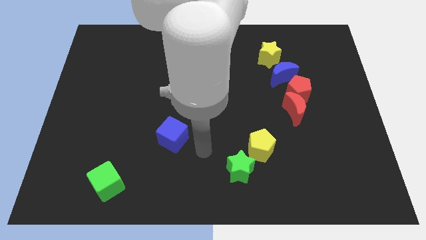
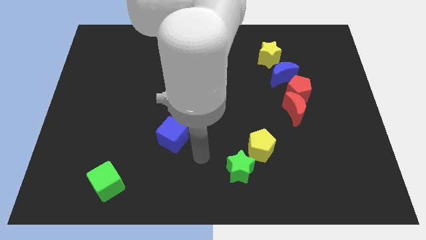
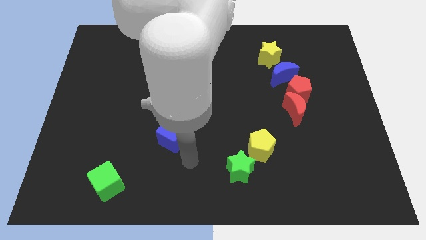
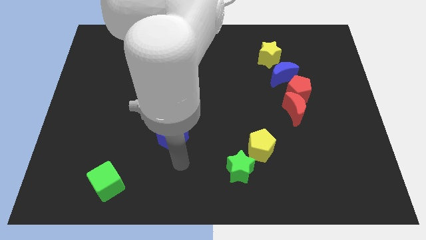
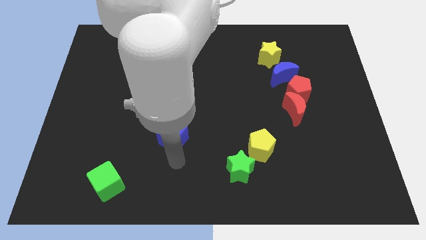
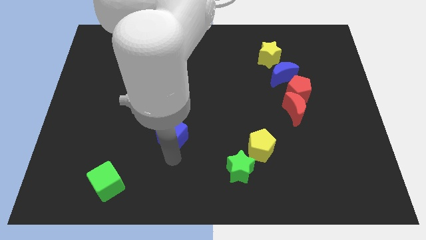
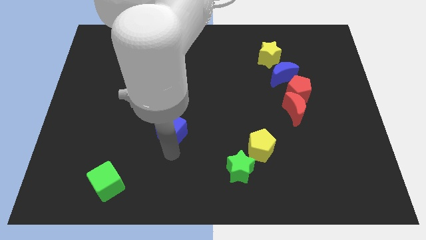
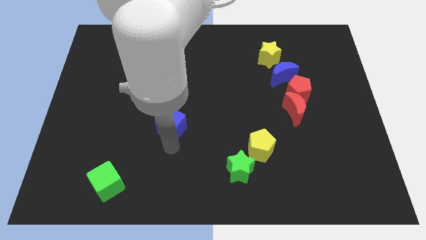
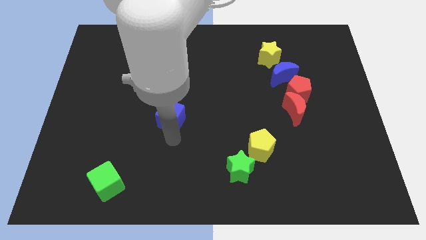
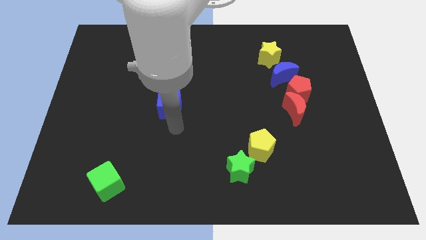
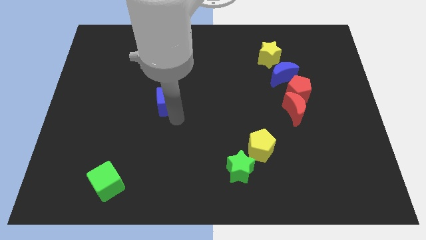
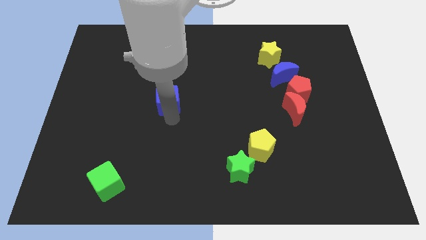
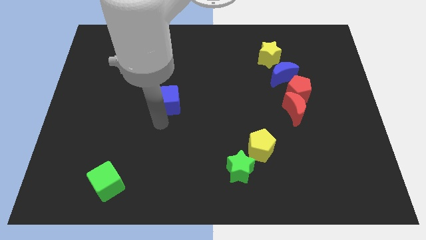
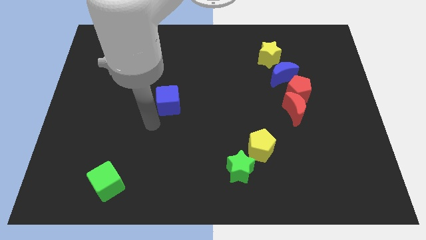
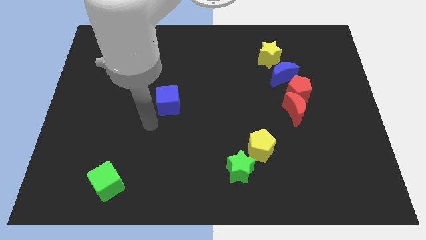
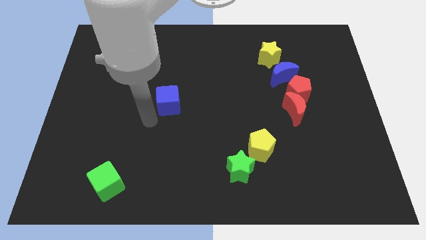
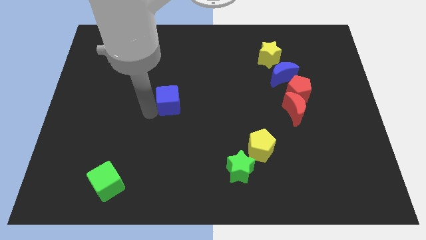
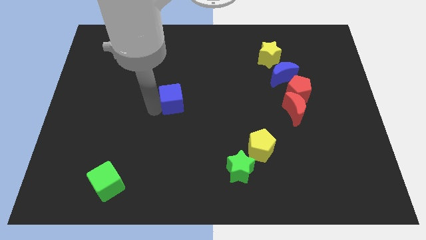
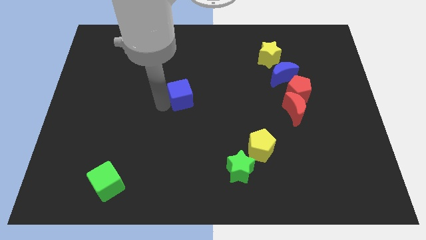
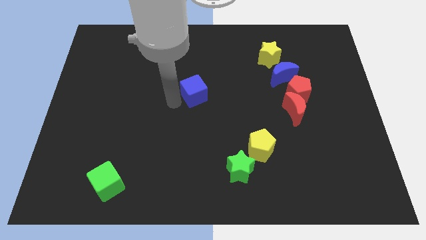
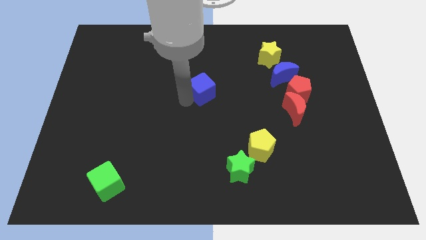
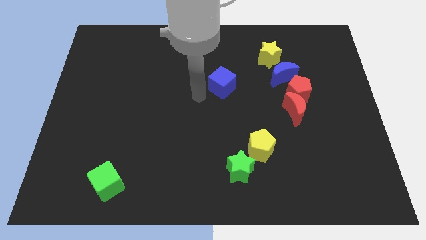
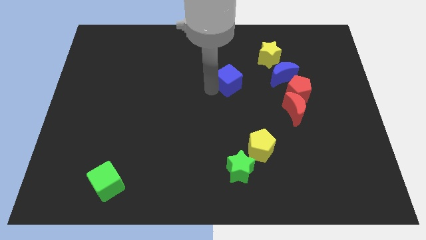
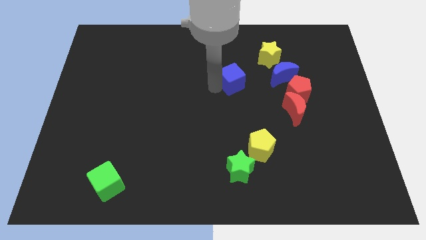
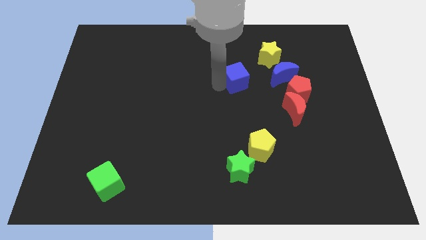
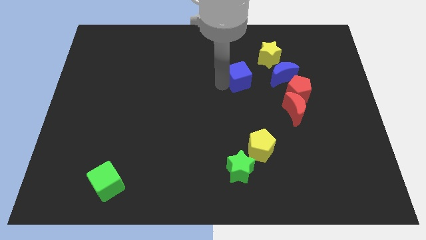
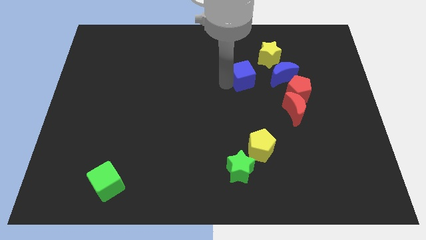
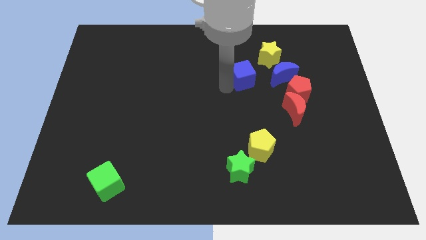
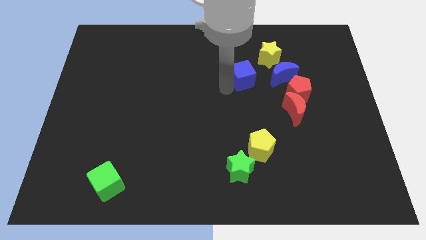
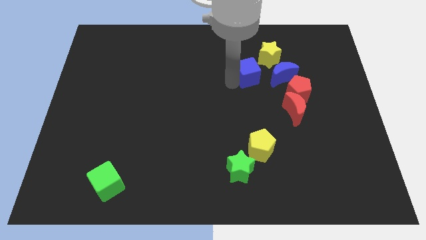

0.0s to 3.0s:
push the blue cube below the yellow star

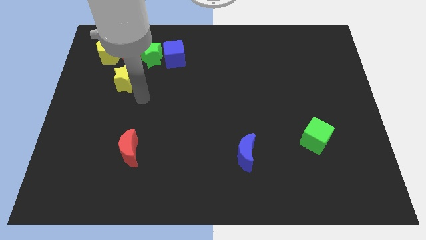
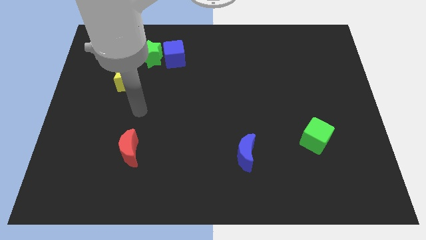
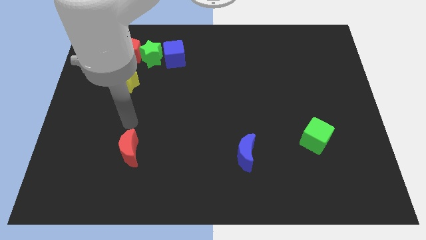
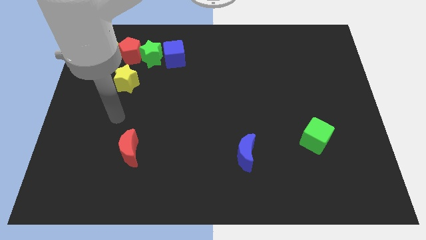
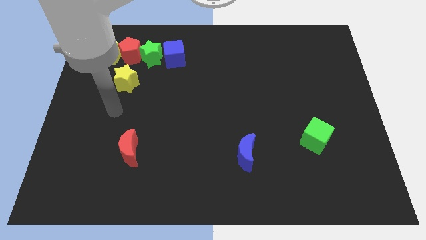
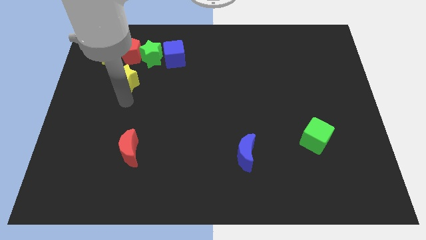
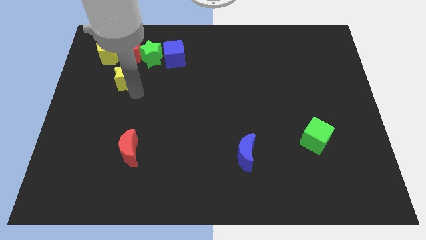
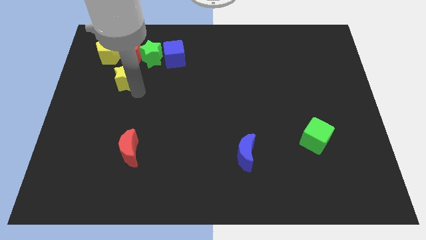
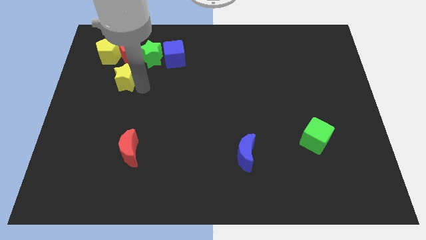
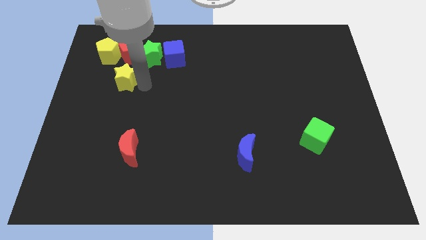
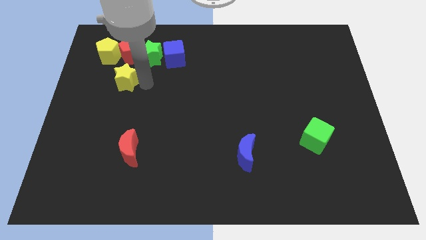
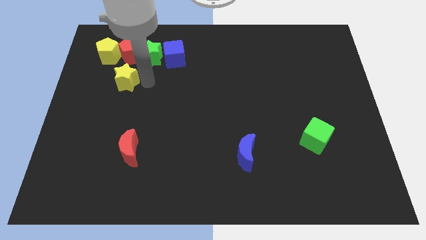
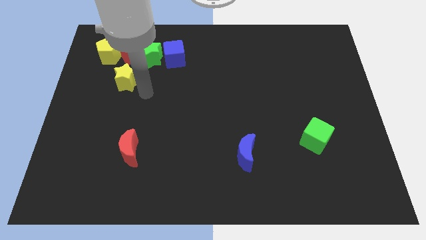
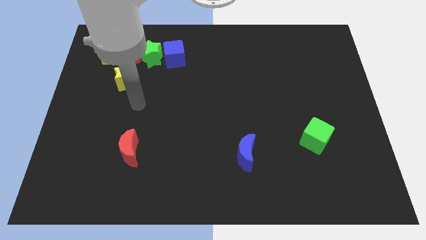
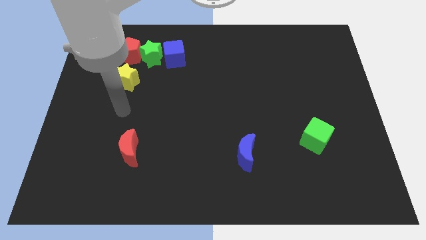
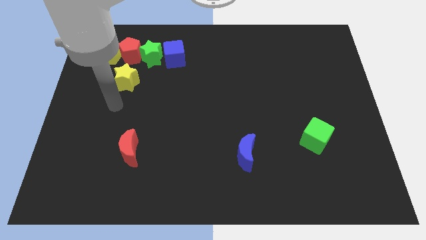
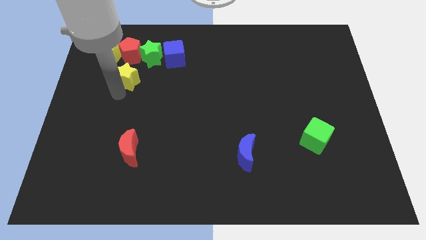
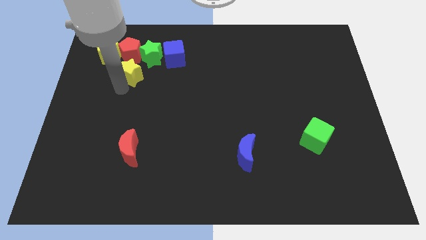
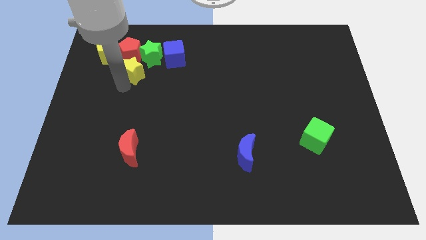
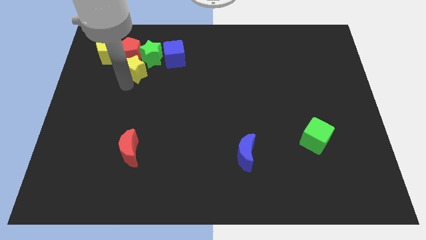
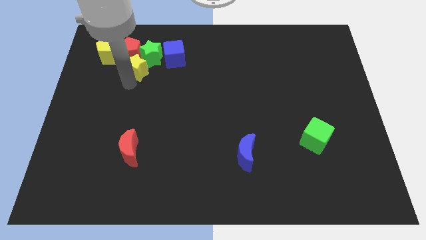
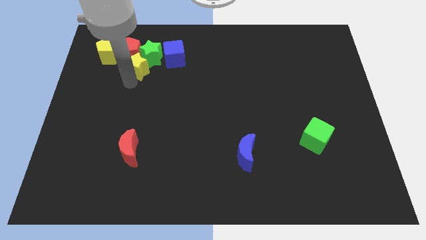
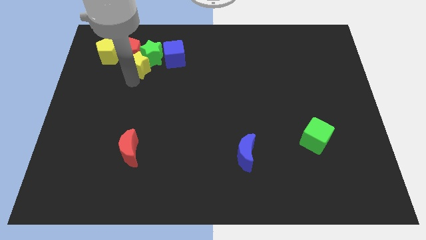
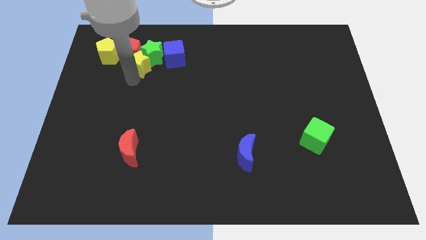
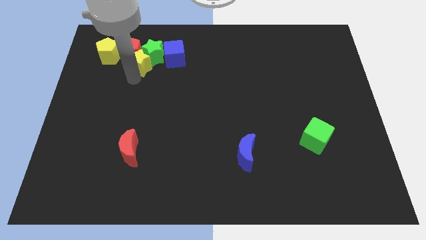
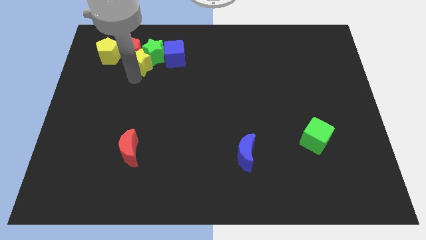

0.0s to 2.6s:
push the yellow star into the green star

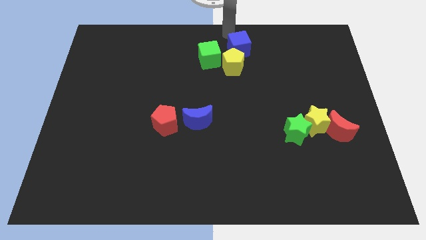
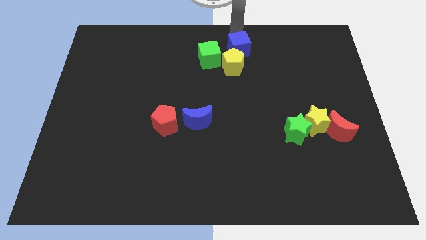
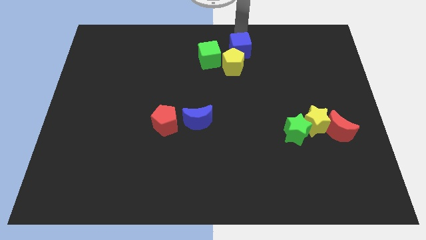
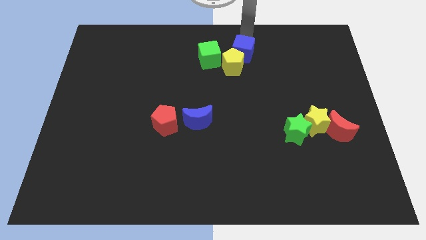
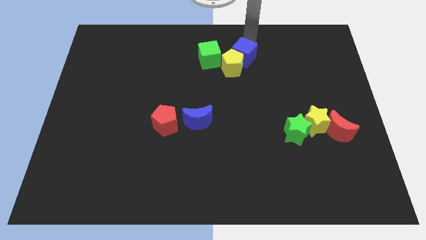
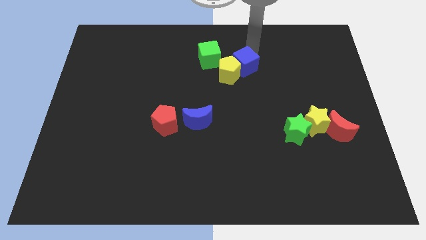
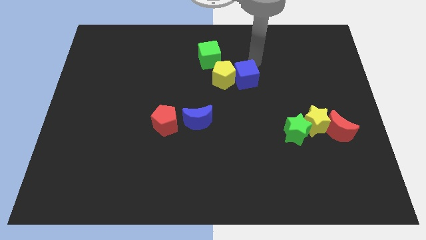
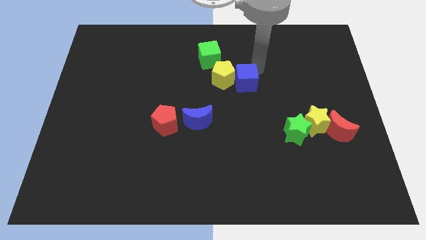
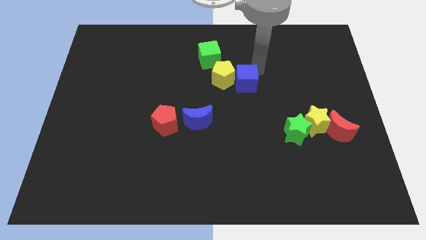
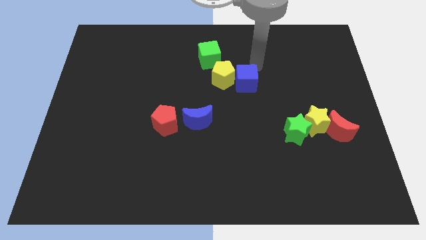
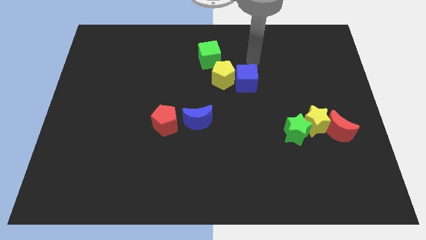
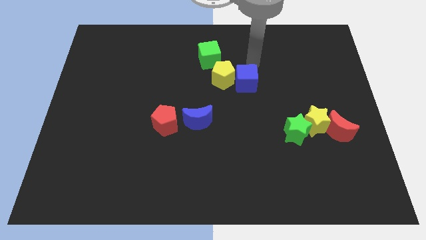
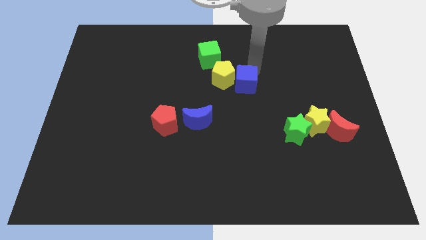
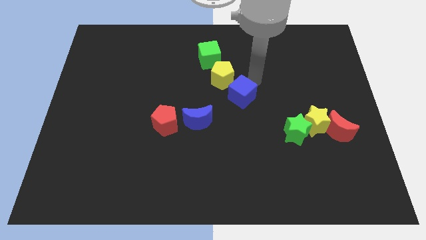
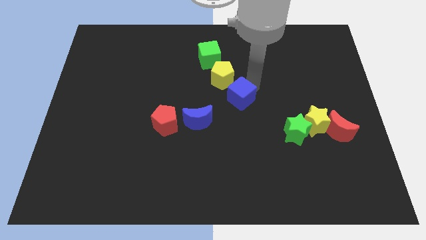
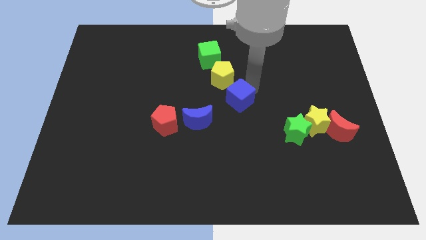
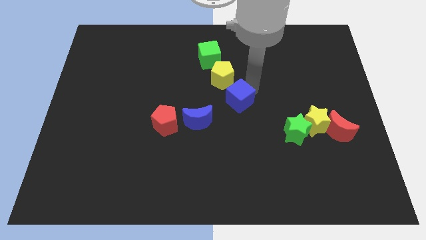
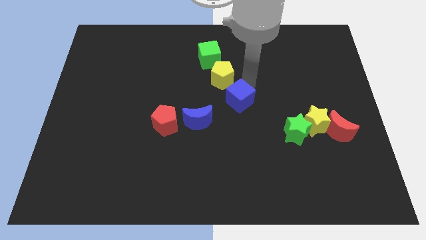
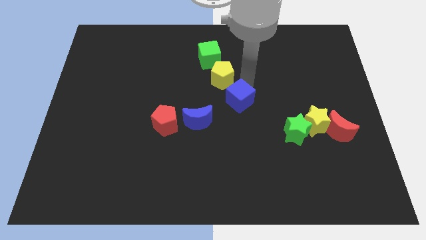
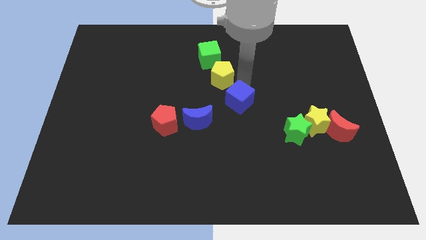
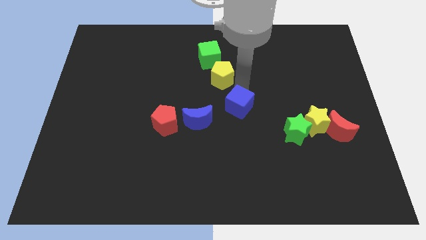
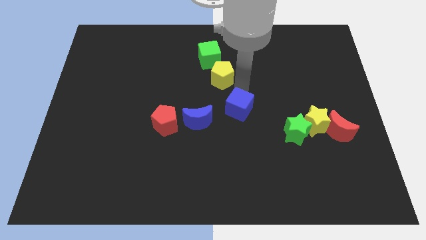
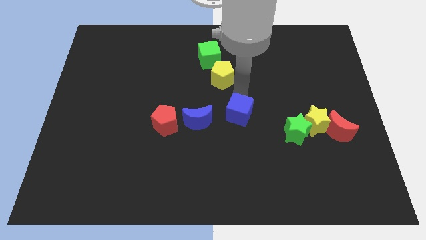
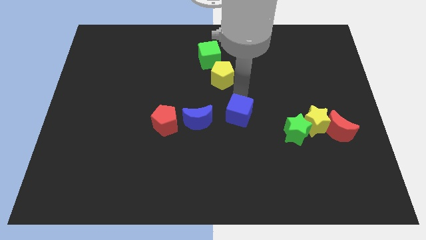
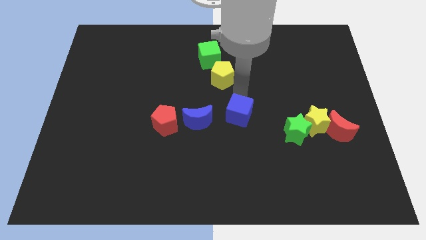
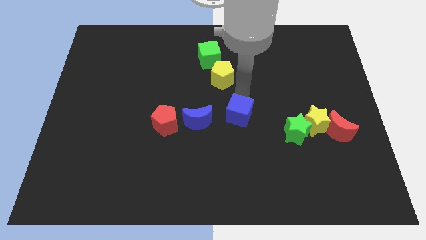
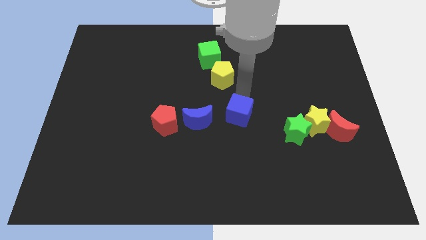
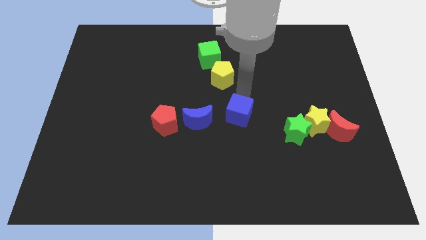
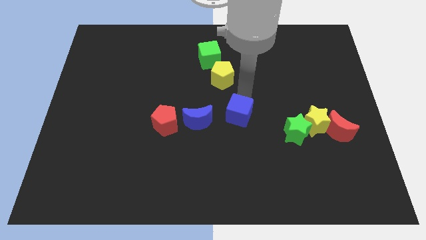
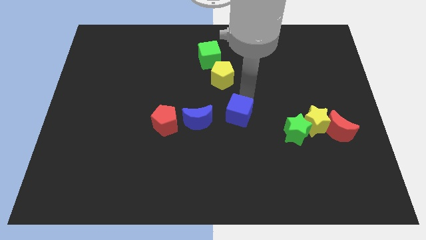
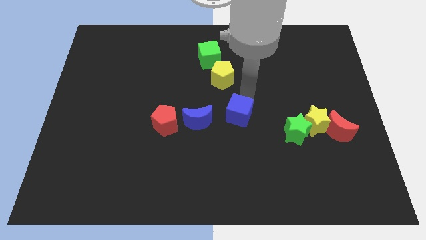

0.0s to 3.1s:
place blue cube in between yellow pentagon and blue moon

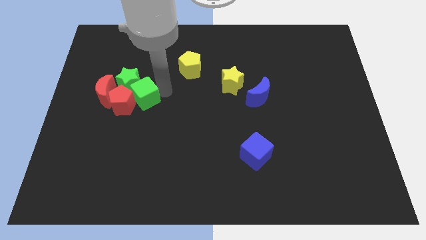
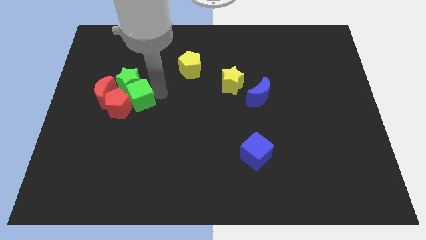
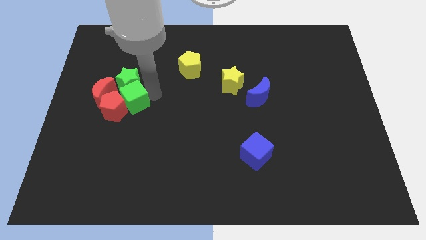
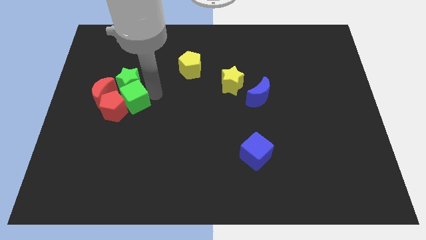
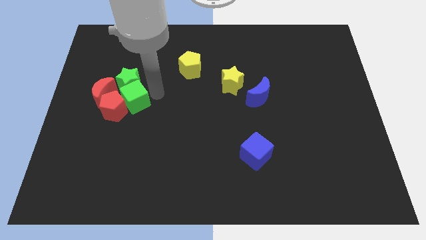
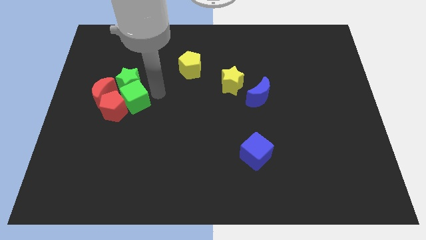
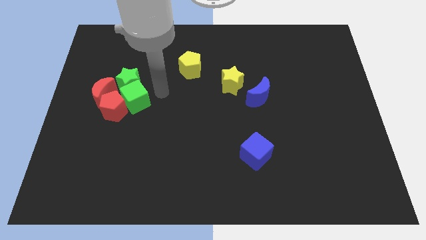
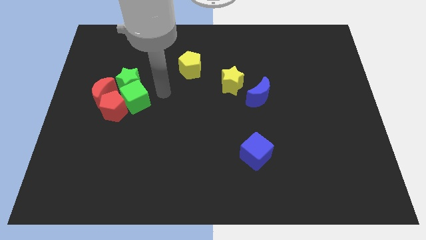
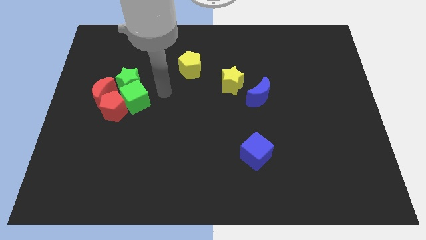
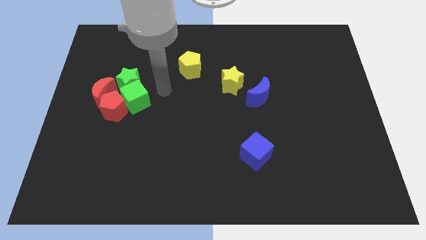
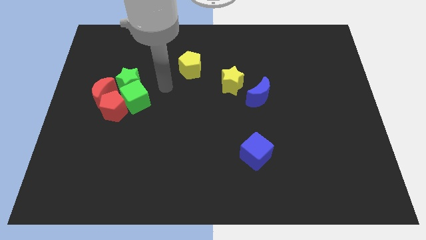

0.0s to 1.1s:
push the green cube into the red pentagon
